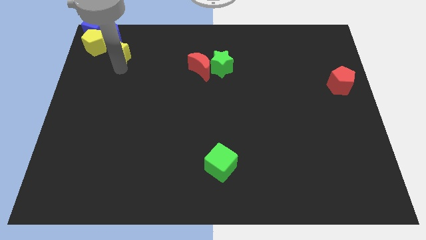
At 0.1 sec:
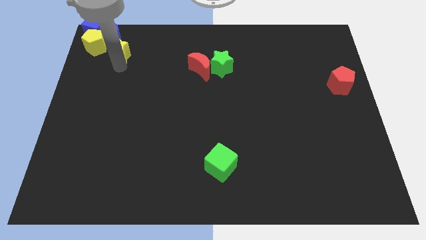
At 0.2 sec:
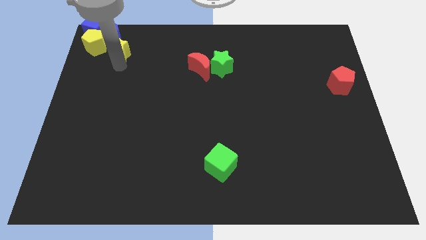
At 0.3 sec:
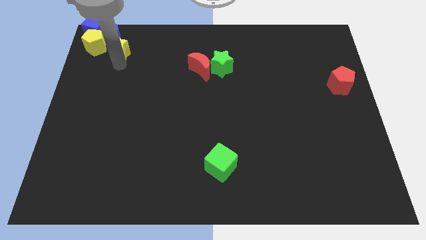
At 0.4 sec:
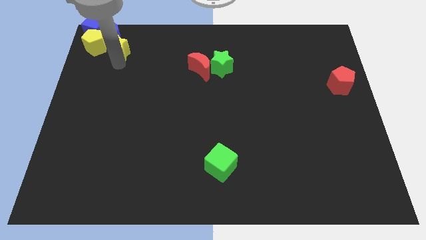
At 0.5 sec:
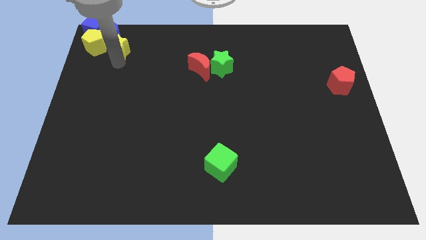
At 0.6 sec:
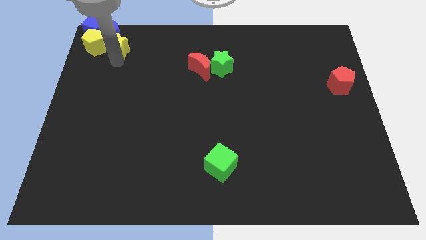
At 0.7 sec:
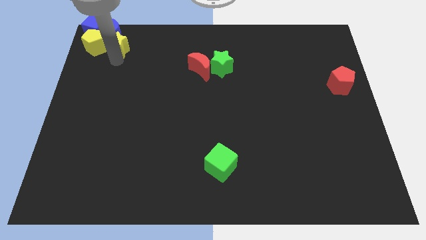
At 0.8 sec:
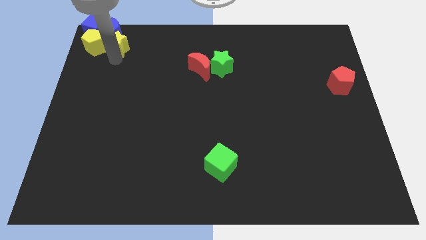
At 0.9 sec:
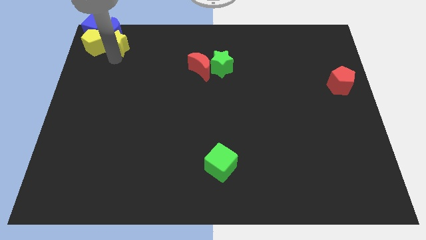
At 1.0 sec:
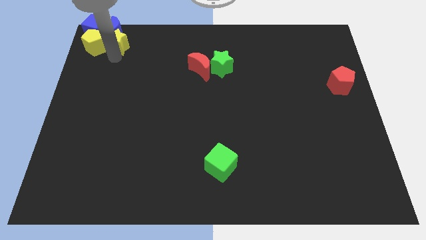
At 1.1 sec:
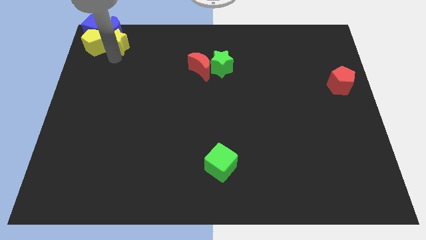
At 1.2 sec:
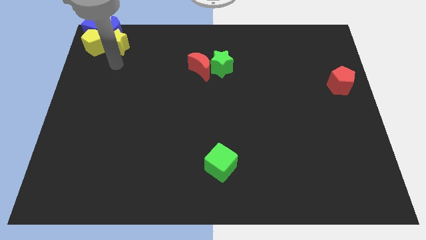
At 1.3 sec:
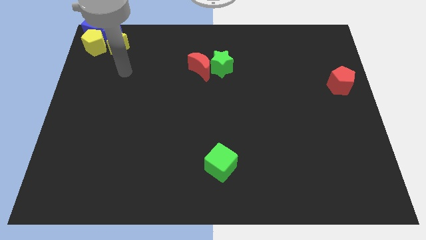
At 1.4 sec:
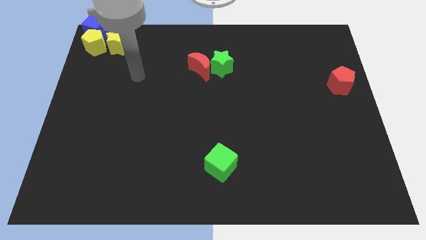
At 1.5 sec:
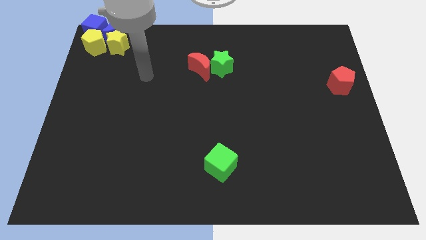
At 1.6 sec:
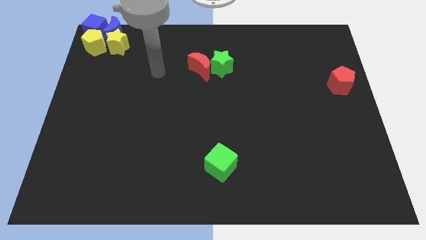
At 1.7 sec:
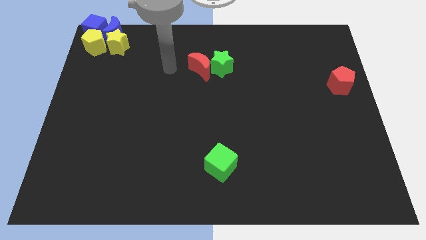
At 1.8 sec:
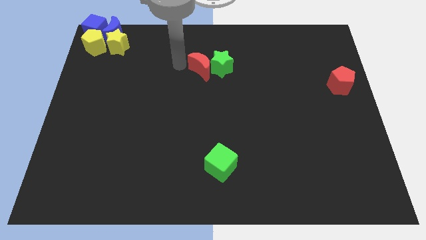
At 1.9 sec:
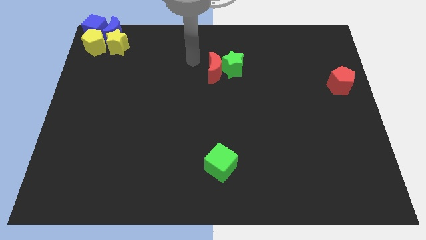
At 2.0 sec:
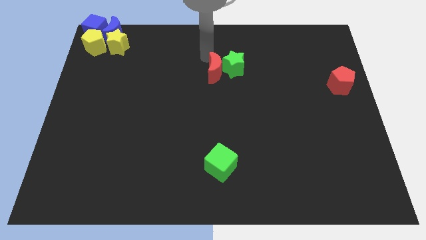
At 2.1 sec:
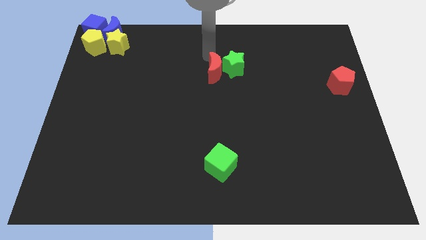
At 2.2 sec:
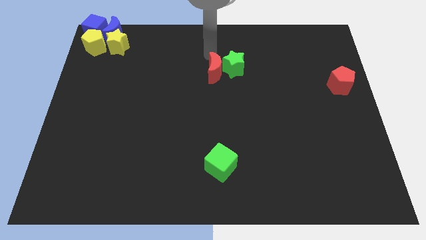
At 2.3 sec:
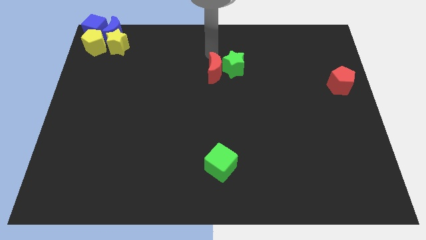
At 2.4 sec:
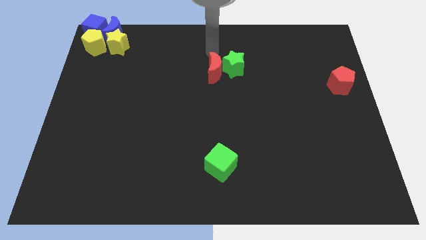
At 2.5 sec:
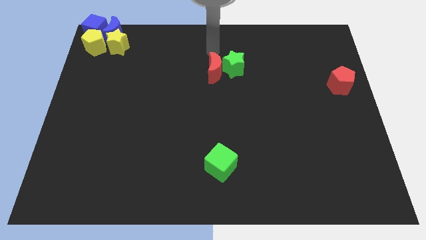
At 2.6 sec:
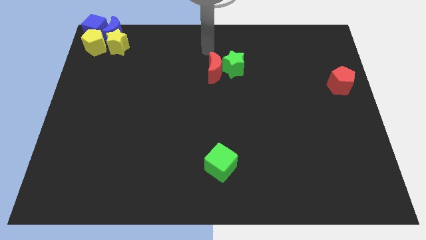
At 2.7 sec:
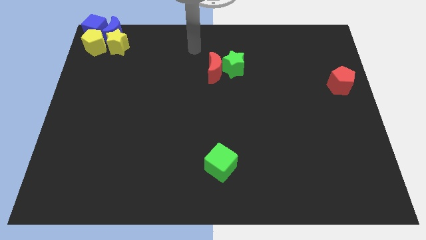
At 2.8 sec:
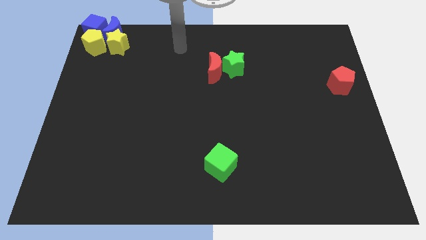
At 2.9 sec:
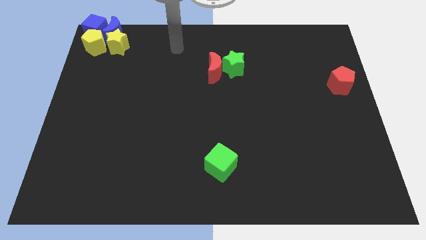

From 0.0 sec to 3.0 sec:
place the red moon vertically above the green cube

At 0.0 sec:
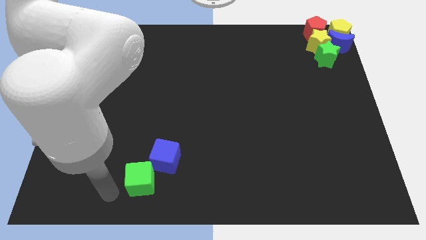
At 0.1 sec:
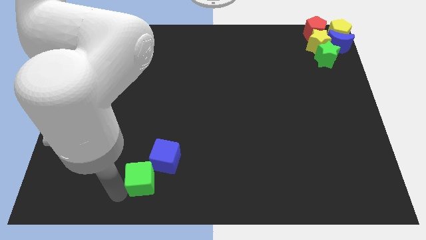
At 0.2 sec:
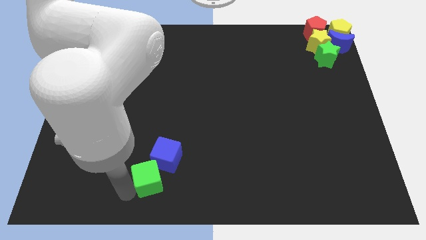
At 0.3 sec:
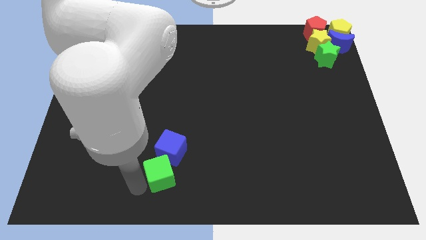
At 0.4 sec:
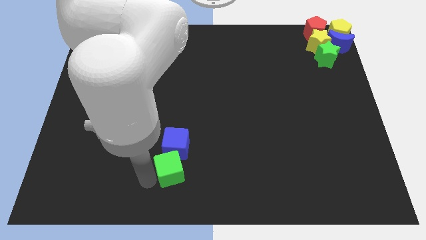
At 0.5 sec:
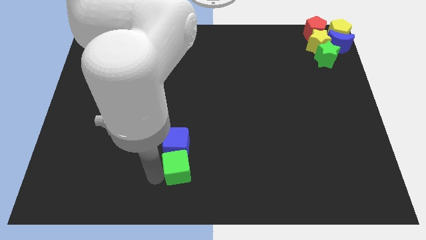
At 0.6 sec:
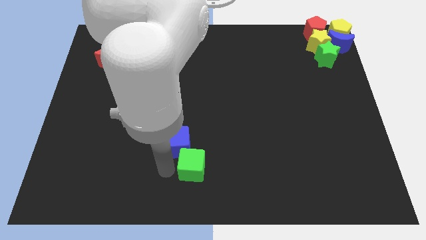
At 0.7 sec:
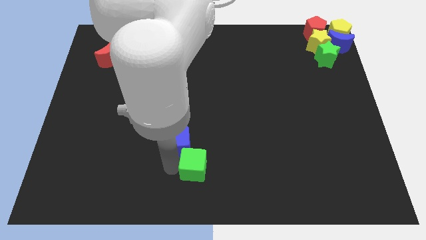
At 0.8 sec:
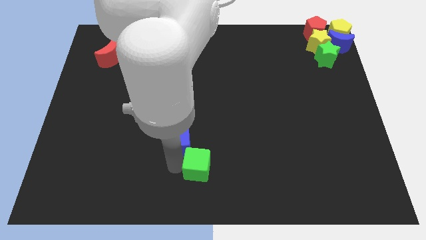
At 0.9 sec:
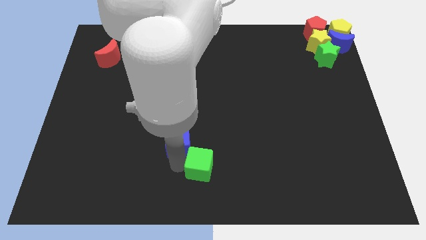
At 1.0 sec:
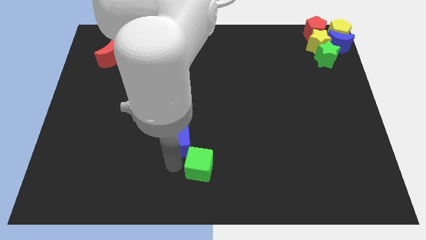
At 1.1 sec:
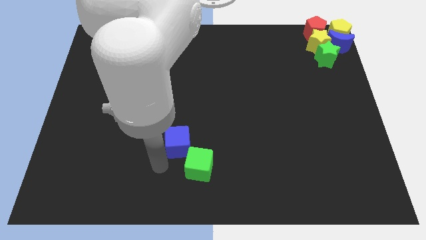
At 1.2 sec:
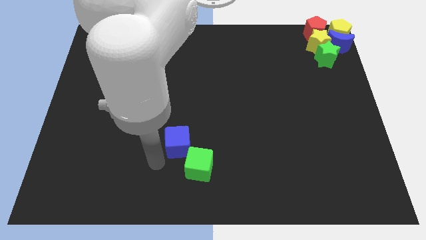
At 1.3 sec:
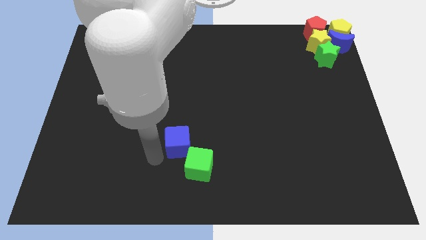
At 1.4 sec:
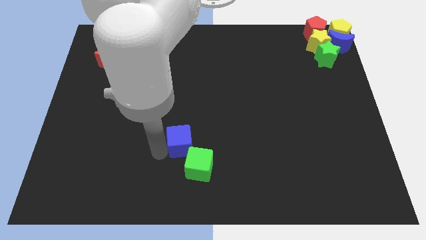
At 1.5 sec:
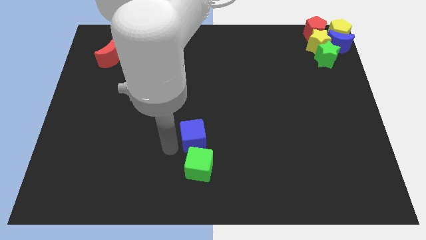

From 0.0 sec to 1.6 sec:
move green and blue cubes to the right of the board

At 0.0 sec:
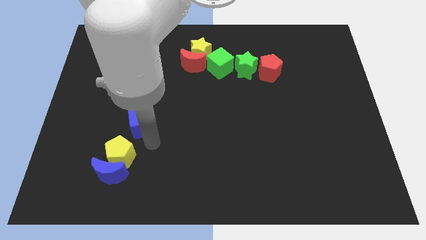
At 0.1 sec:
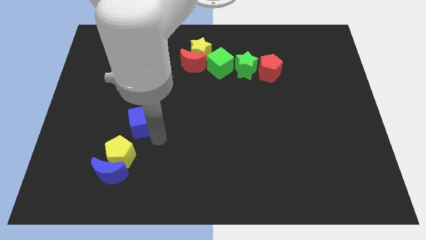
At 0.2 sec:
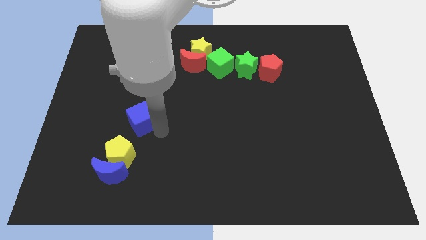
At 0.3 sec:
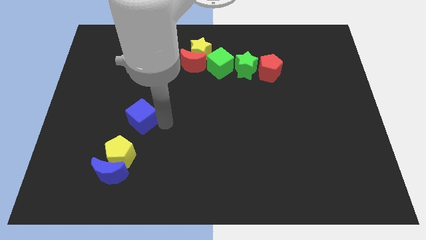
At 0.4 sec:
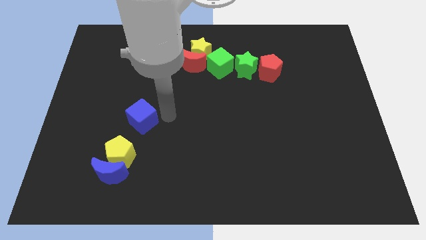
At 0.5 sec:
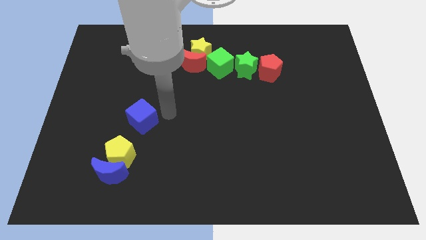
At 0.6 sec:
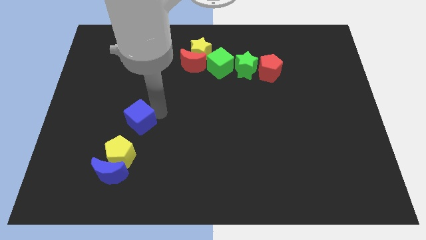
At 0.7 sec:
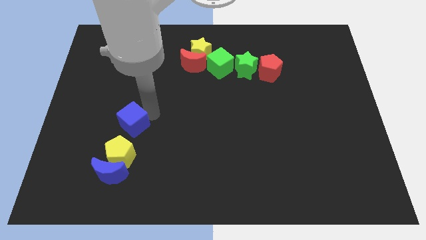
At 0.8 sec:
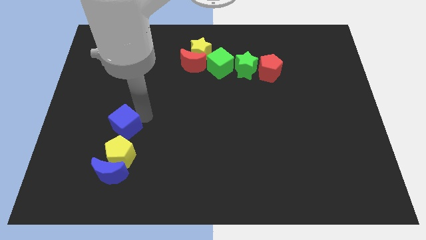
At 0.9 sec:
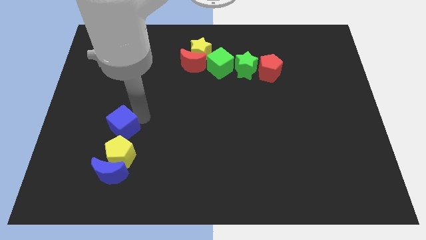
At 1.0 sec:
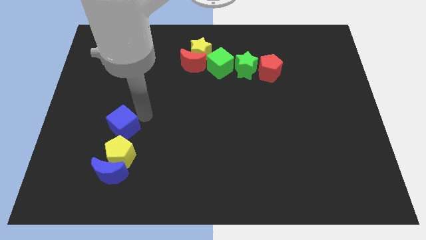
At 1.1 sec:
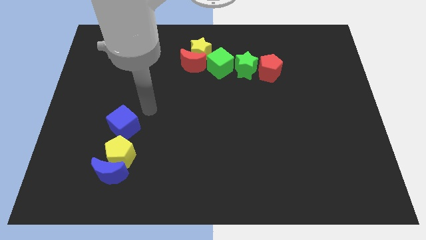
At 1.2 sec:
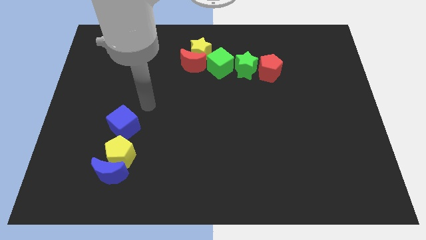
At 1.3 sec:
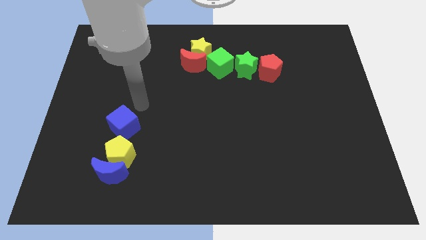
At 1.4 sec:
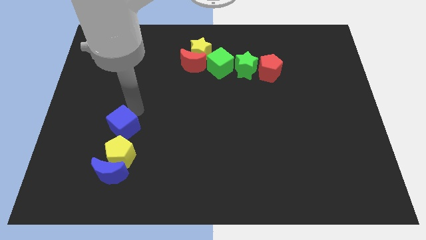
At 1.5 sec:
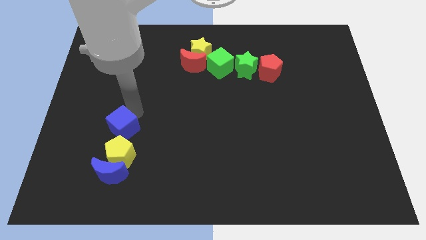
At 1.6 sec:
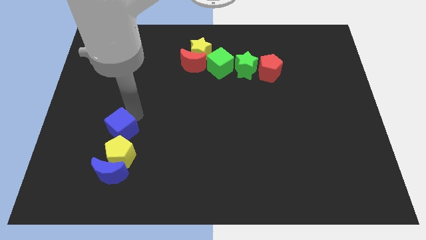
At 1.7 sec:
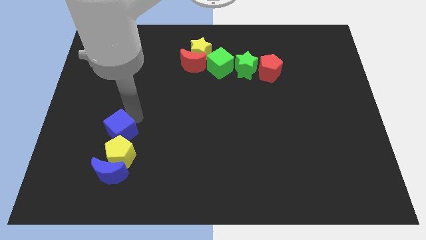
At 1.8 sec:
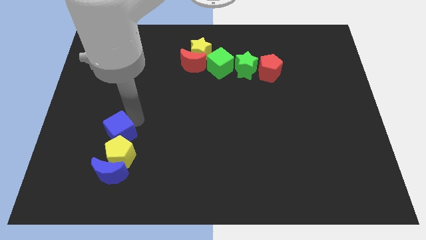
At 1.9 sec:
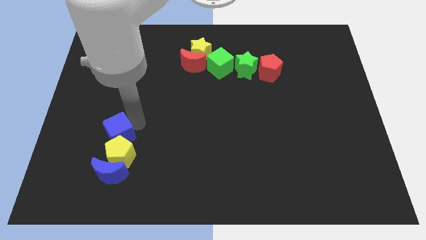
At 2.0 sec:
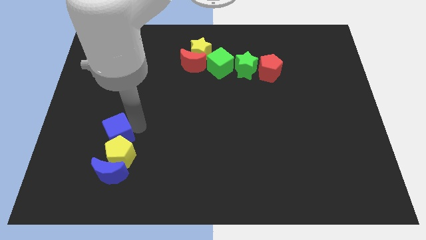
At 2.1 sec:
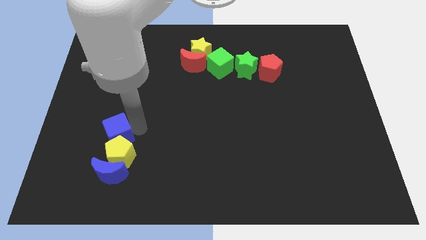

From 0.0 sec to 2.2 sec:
put the blue cube above the yellow pentagon

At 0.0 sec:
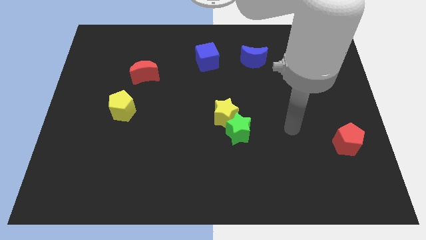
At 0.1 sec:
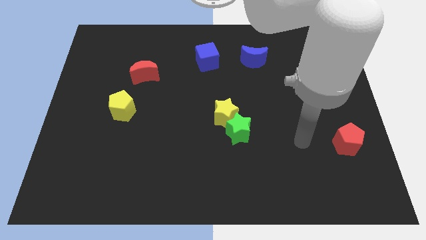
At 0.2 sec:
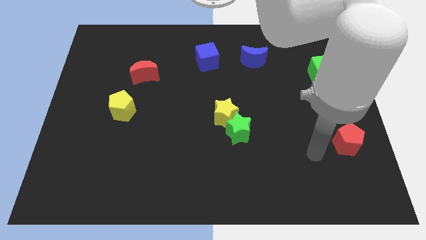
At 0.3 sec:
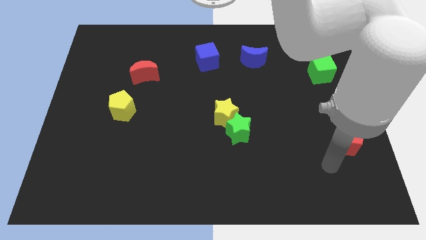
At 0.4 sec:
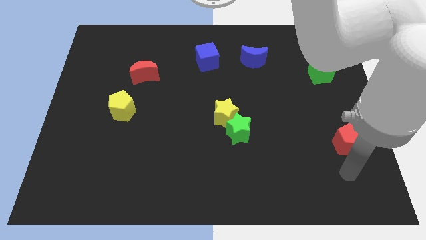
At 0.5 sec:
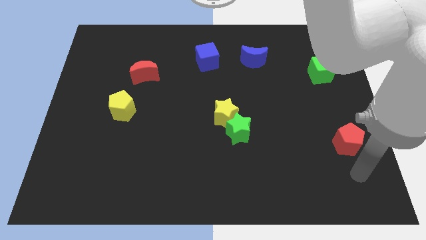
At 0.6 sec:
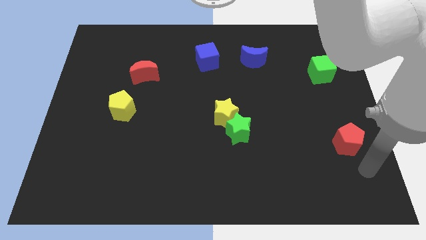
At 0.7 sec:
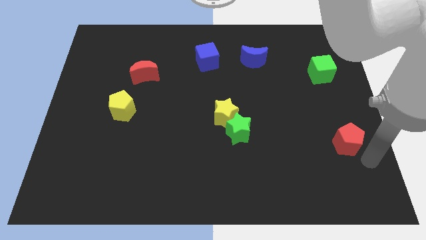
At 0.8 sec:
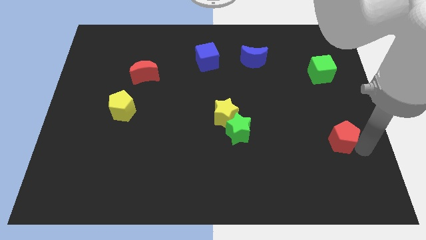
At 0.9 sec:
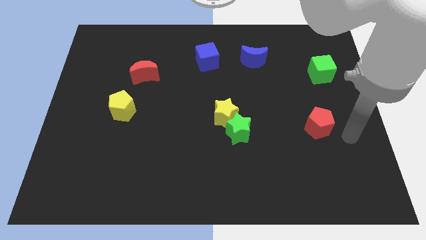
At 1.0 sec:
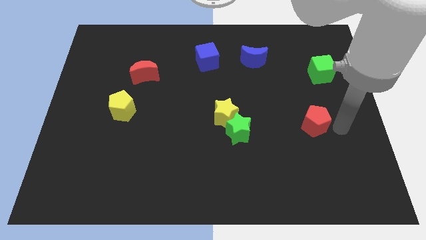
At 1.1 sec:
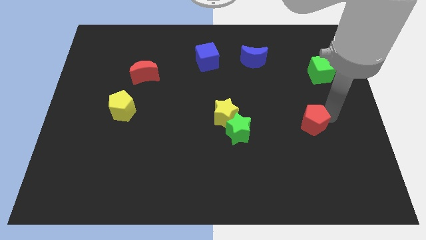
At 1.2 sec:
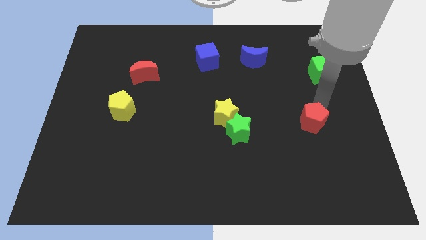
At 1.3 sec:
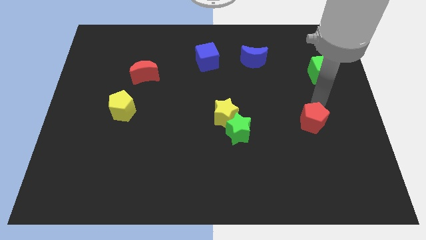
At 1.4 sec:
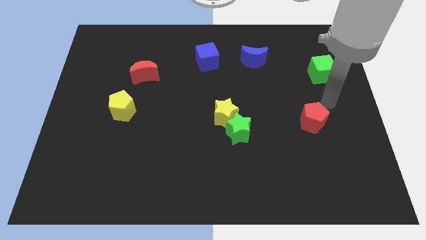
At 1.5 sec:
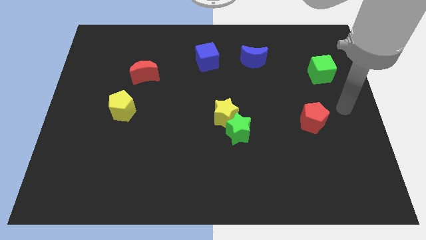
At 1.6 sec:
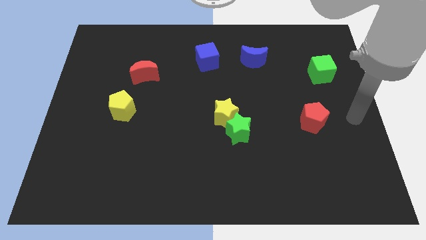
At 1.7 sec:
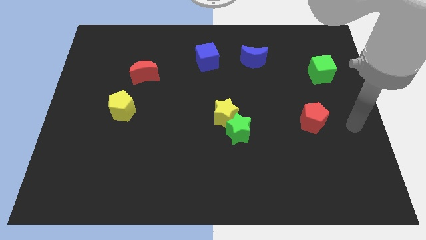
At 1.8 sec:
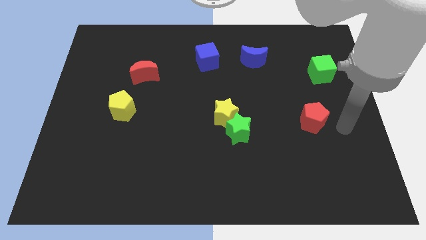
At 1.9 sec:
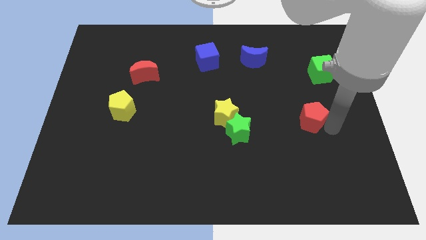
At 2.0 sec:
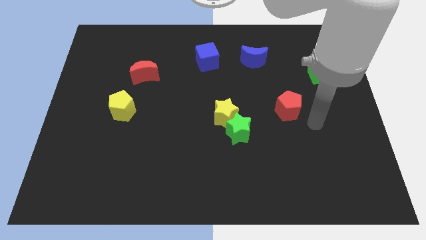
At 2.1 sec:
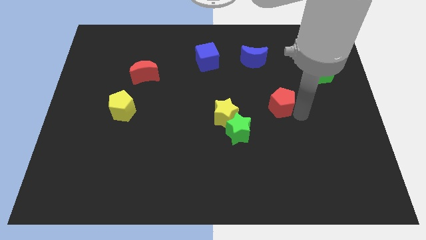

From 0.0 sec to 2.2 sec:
place the red pentagon in between the green blocks
